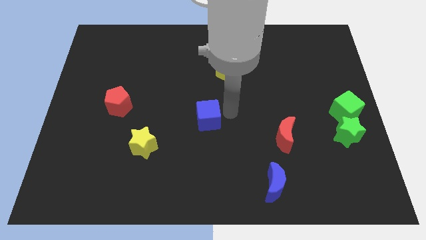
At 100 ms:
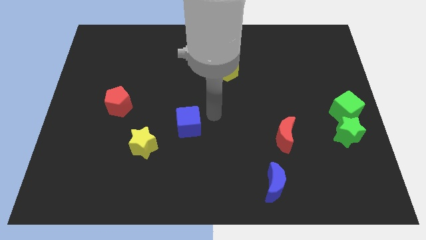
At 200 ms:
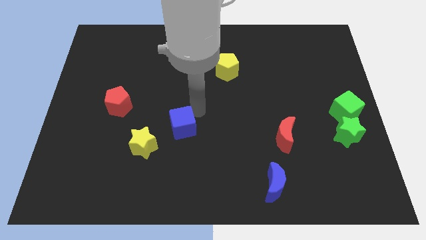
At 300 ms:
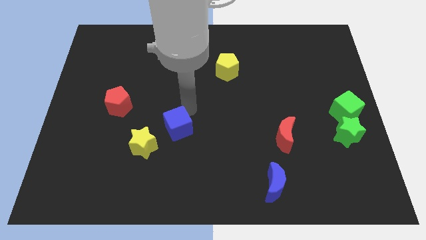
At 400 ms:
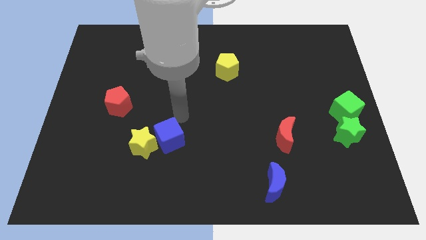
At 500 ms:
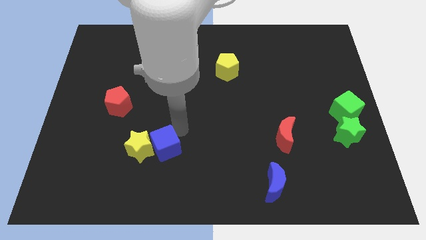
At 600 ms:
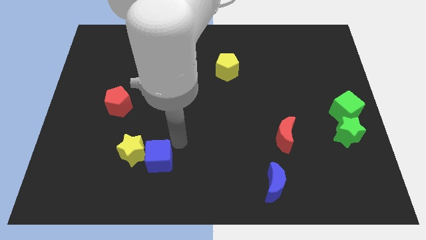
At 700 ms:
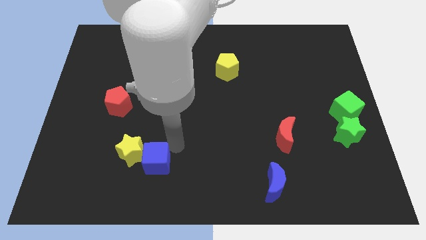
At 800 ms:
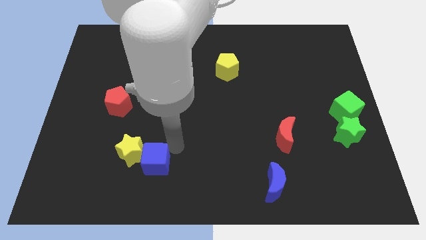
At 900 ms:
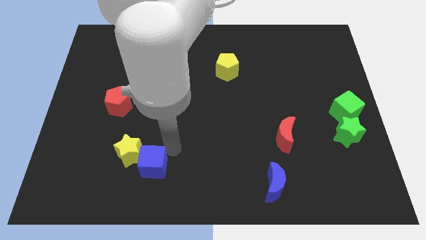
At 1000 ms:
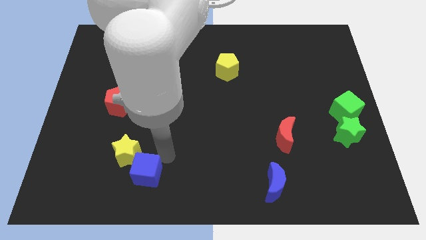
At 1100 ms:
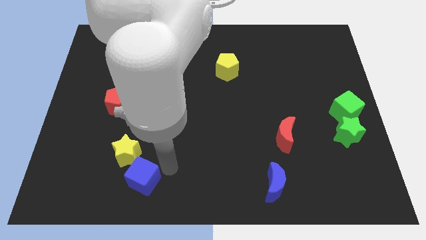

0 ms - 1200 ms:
push the blue cube into the yellow star

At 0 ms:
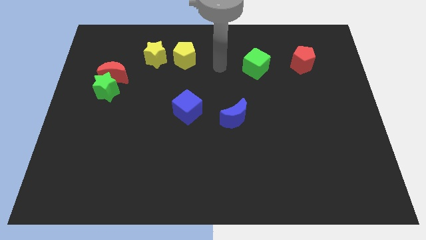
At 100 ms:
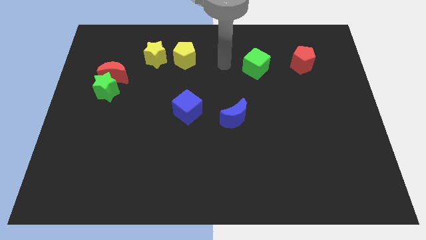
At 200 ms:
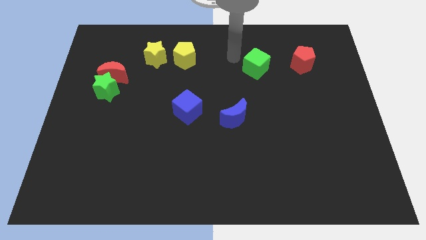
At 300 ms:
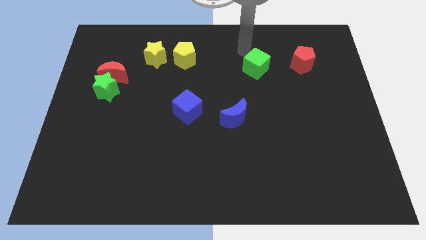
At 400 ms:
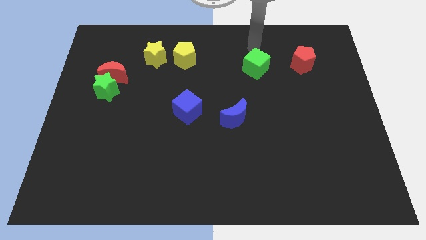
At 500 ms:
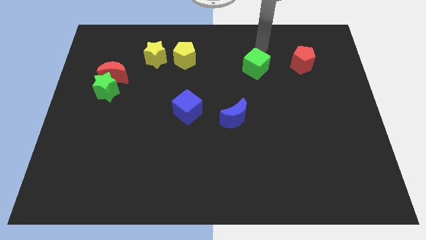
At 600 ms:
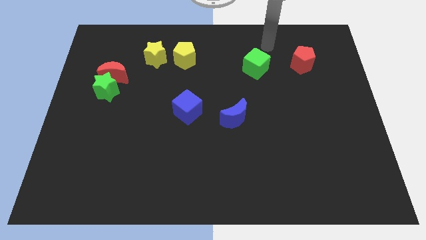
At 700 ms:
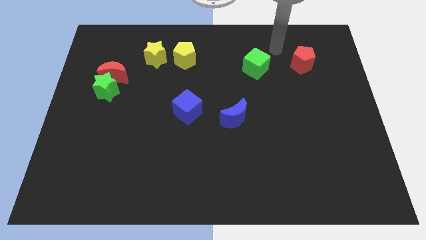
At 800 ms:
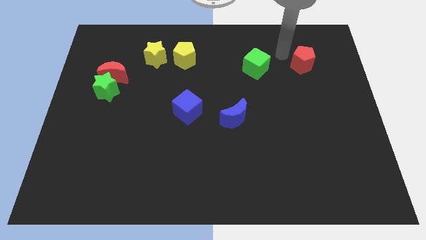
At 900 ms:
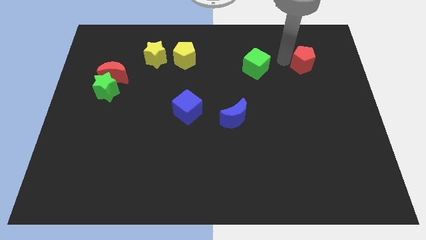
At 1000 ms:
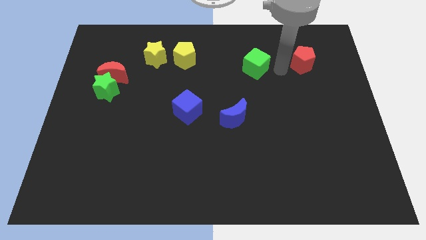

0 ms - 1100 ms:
place arm in between green cube and red pentagon

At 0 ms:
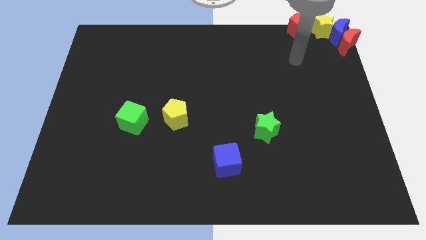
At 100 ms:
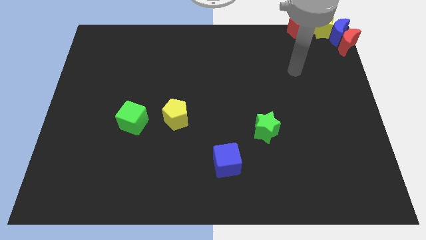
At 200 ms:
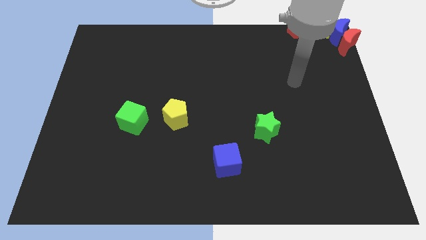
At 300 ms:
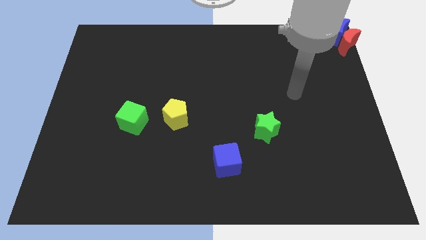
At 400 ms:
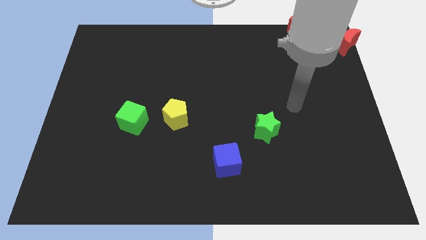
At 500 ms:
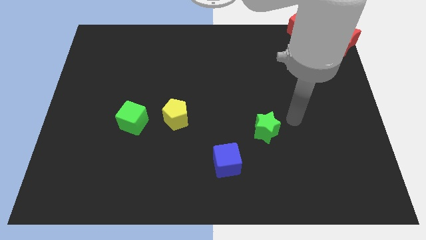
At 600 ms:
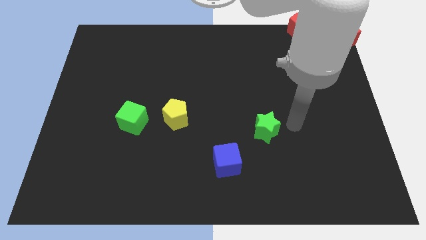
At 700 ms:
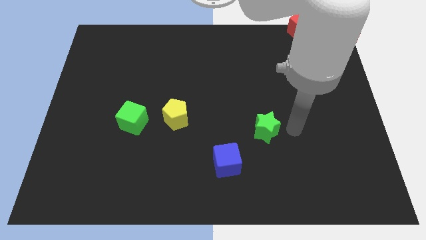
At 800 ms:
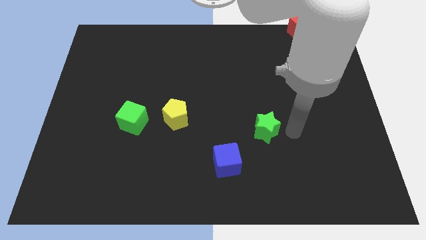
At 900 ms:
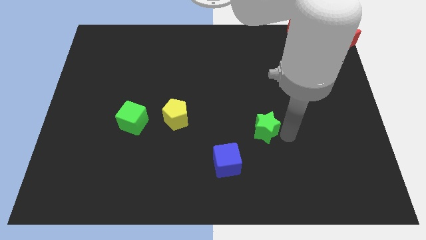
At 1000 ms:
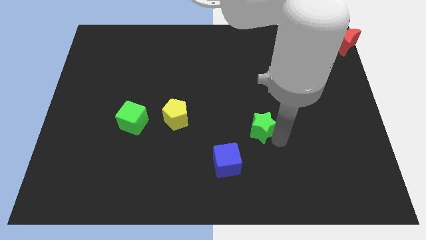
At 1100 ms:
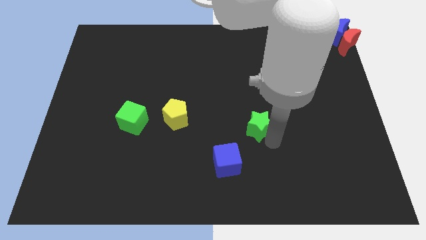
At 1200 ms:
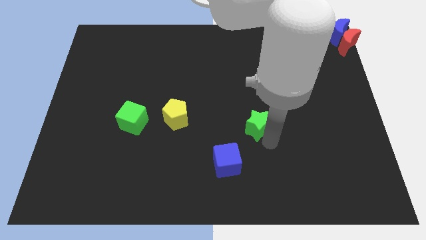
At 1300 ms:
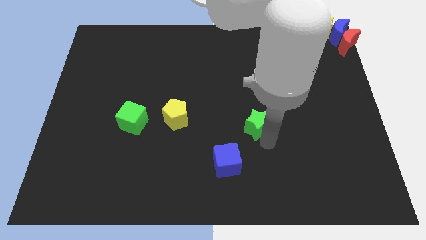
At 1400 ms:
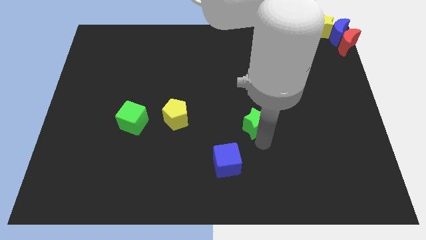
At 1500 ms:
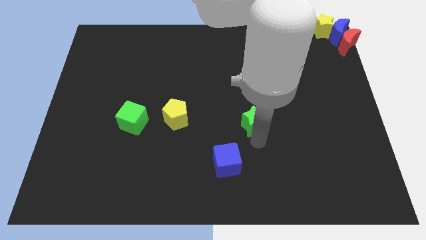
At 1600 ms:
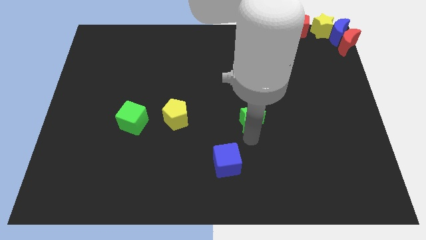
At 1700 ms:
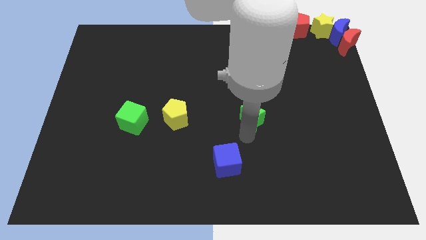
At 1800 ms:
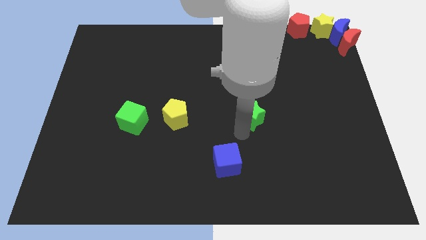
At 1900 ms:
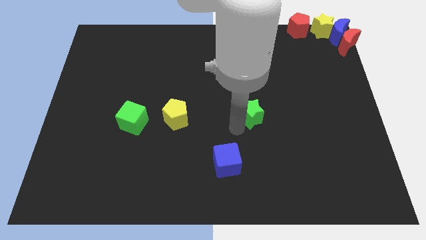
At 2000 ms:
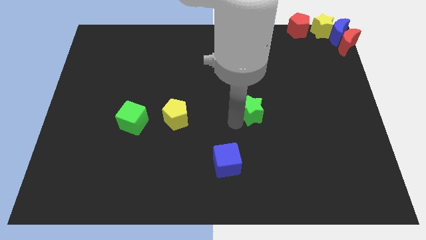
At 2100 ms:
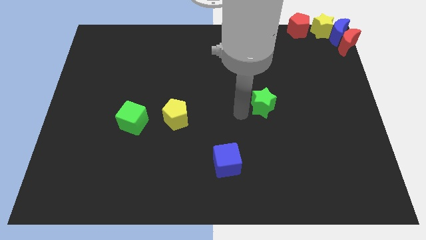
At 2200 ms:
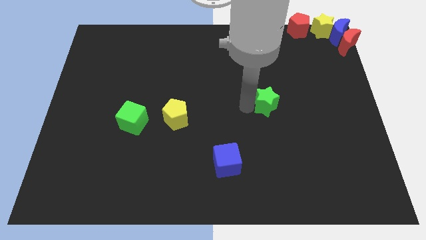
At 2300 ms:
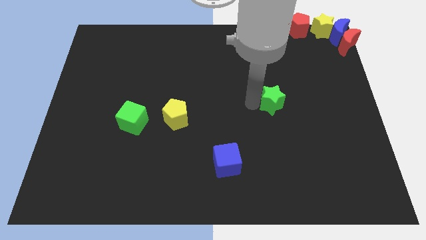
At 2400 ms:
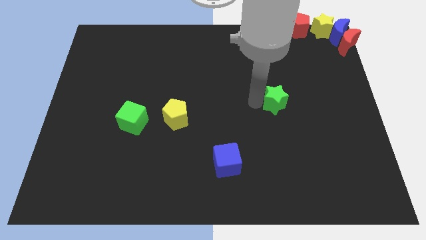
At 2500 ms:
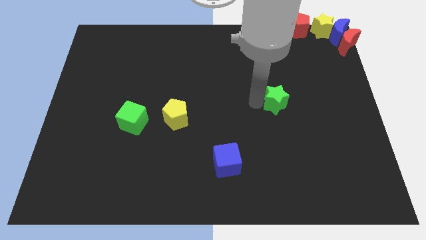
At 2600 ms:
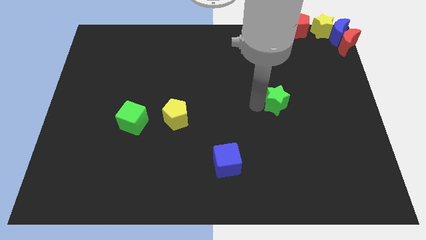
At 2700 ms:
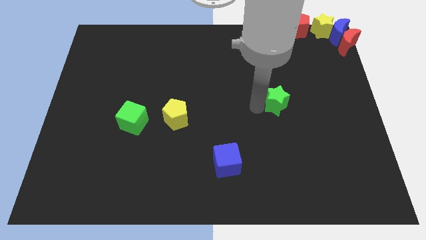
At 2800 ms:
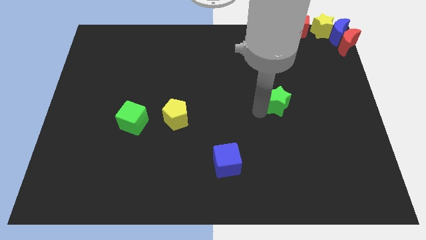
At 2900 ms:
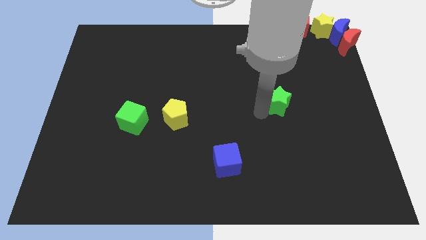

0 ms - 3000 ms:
move your arm to the green star

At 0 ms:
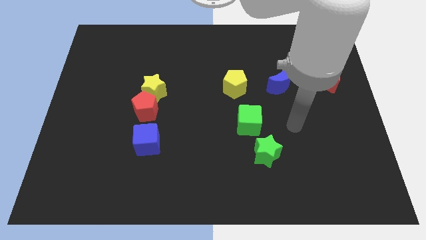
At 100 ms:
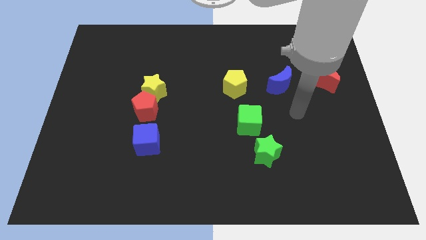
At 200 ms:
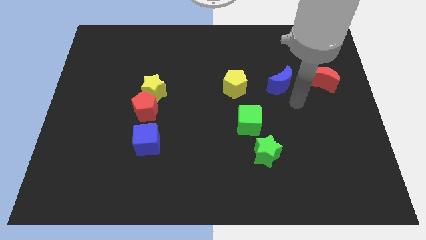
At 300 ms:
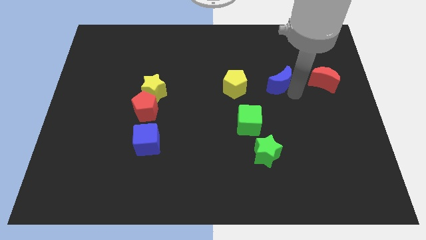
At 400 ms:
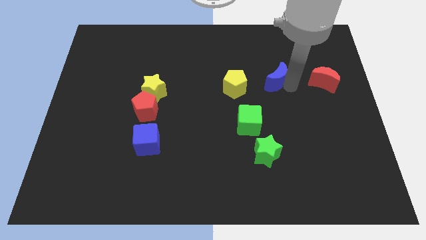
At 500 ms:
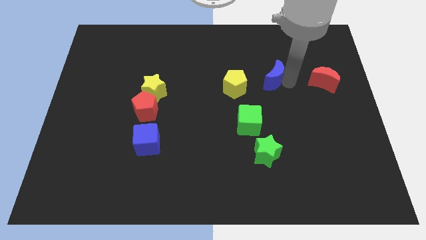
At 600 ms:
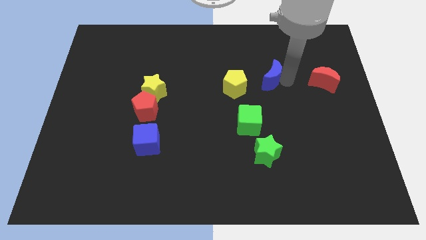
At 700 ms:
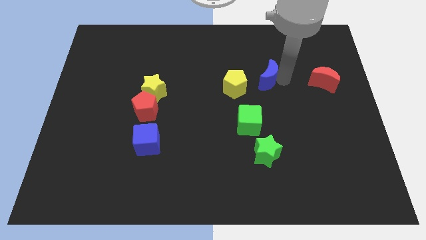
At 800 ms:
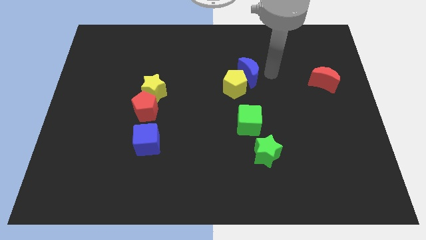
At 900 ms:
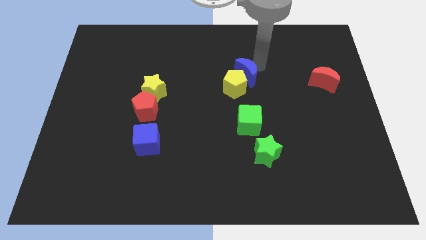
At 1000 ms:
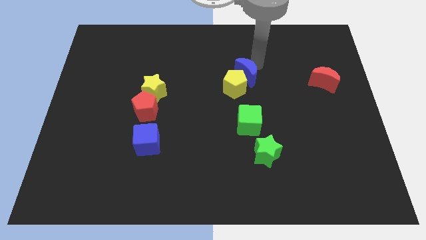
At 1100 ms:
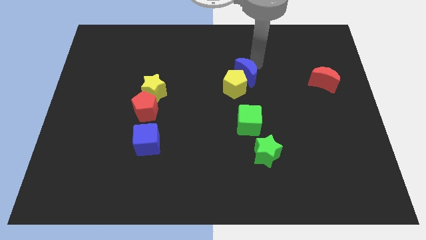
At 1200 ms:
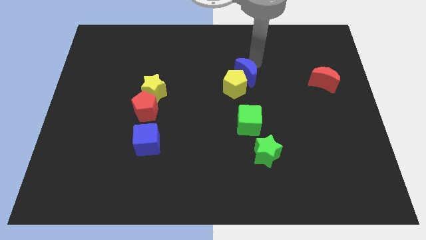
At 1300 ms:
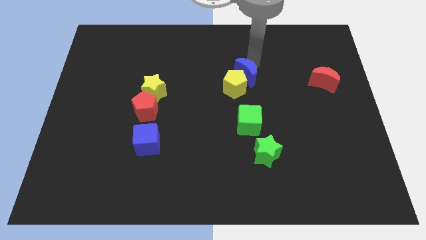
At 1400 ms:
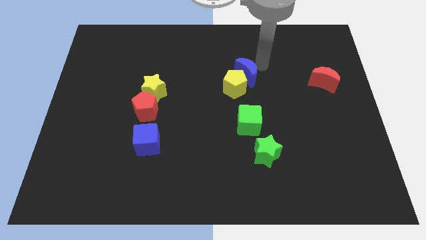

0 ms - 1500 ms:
push the blue moon to the top right side of the yellow pentagon

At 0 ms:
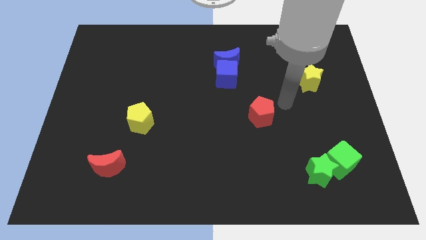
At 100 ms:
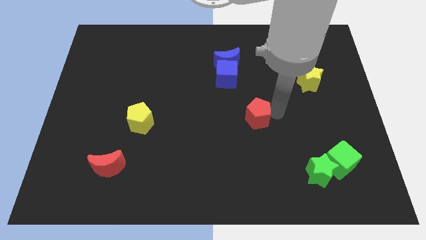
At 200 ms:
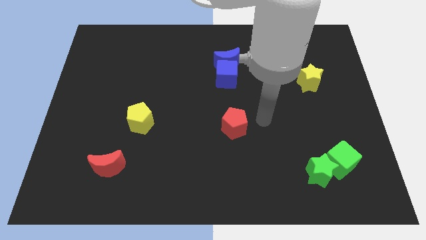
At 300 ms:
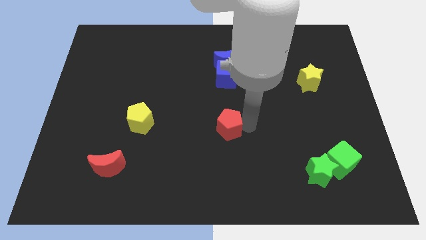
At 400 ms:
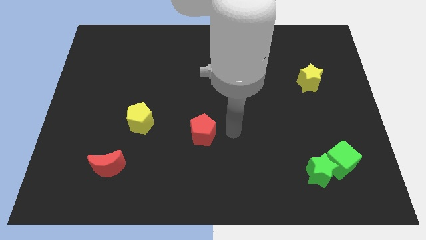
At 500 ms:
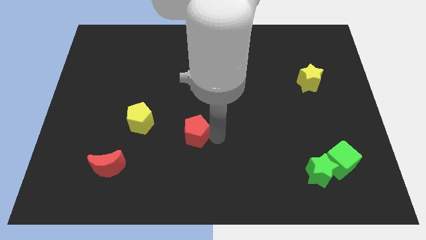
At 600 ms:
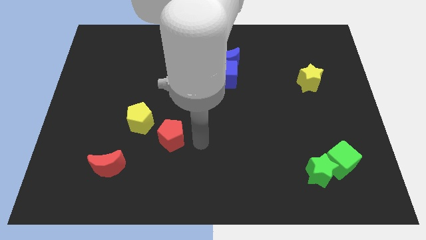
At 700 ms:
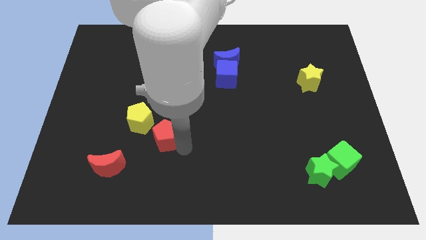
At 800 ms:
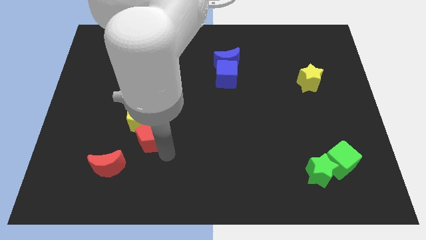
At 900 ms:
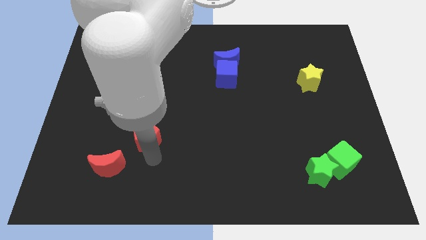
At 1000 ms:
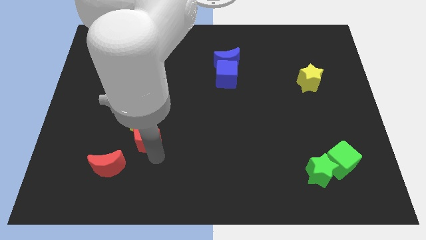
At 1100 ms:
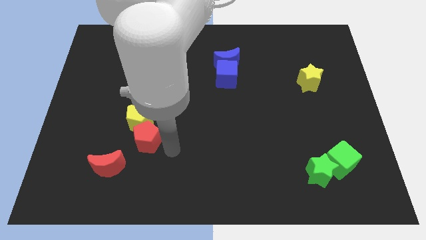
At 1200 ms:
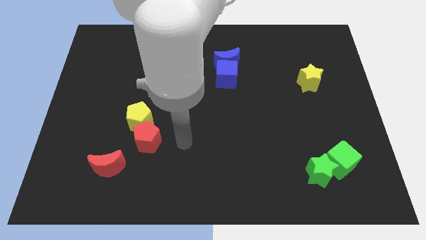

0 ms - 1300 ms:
place red pentagon below yellow pentagon

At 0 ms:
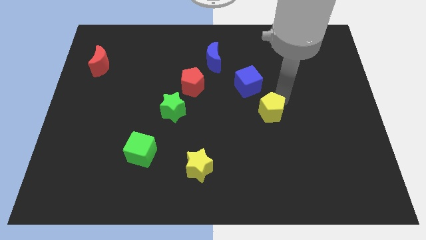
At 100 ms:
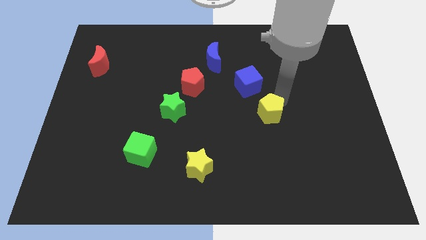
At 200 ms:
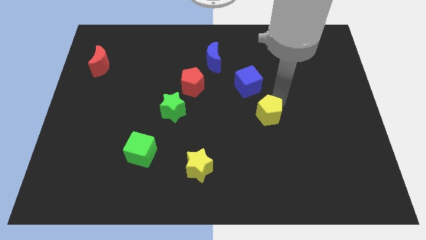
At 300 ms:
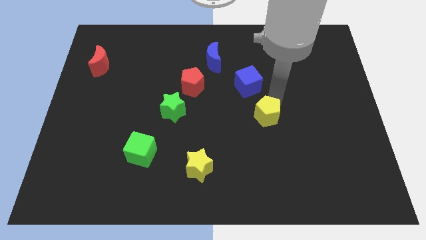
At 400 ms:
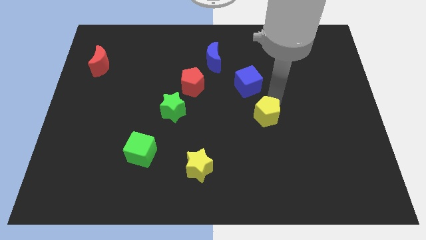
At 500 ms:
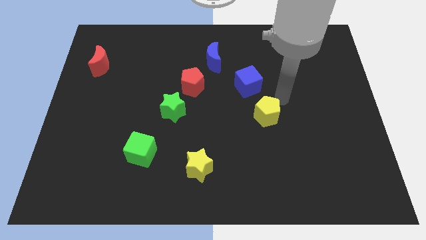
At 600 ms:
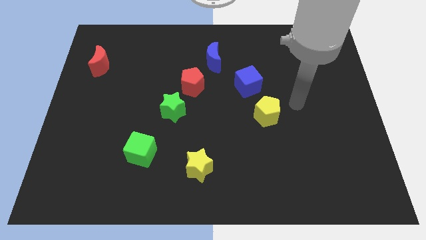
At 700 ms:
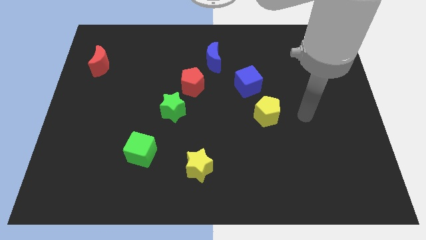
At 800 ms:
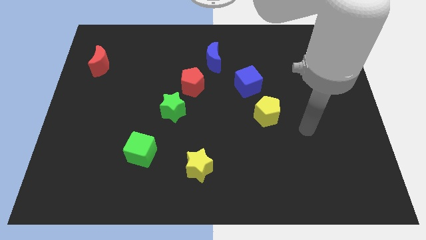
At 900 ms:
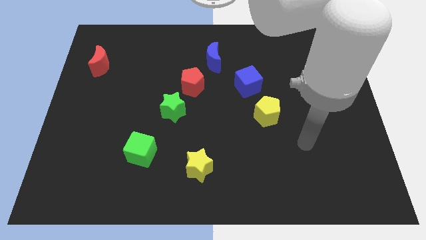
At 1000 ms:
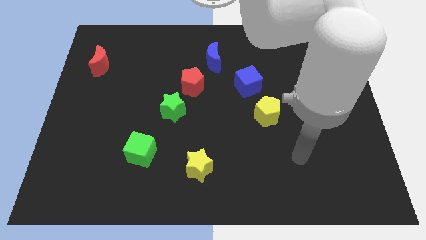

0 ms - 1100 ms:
place the yellow pentagon to the right of the green star
